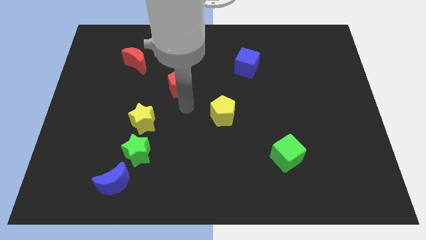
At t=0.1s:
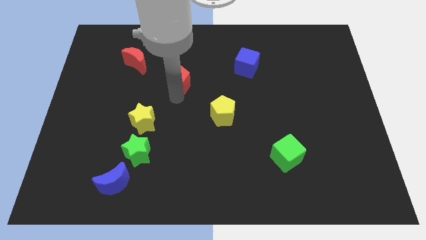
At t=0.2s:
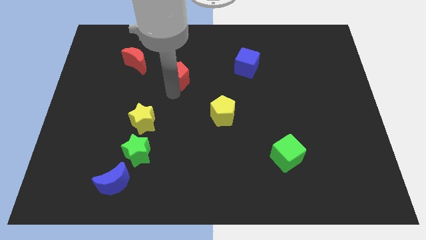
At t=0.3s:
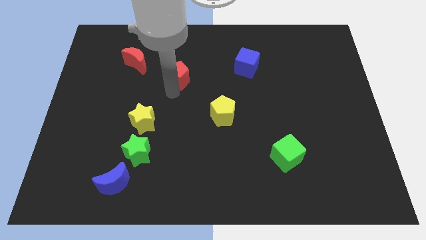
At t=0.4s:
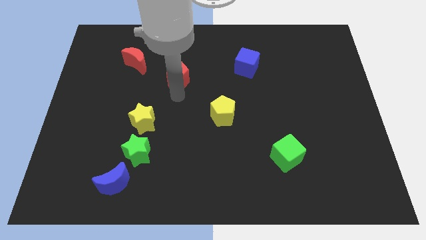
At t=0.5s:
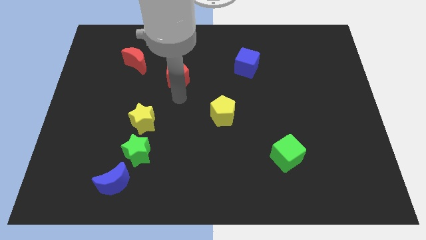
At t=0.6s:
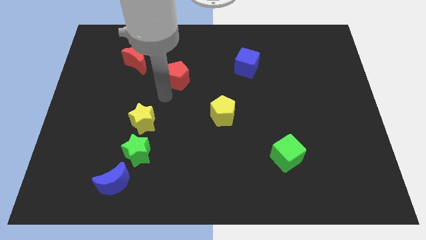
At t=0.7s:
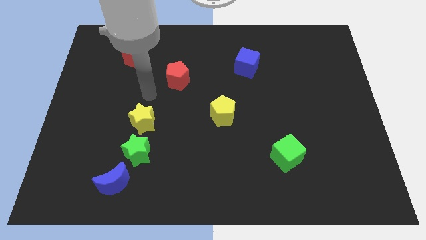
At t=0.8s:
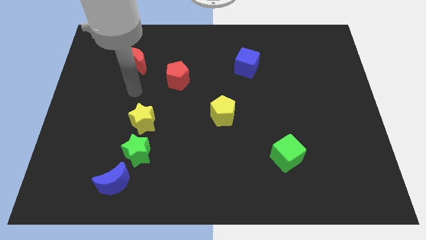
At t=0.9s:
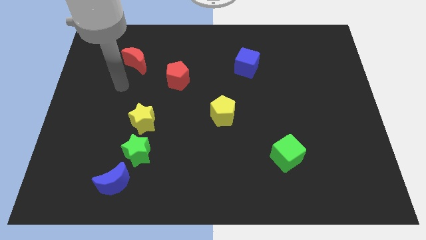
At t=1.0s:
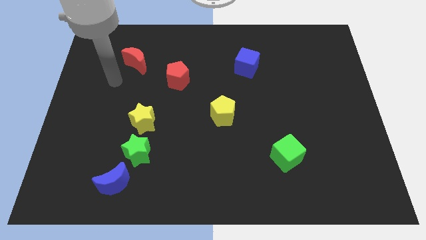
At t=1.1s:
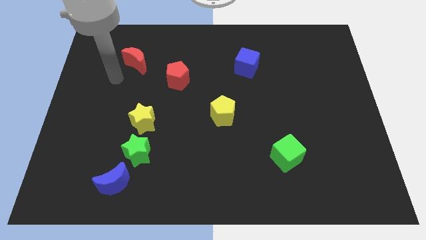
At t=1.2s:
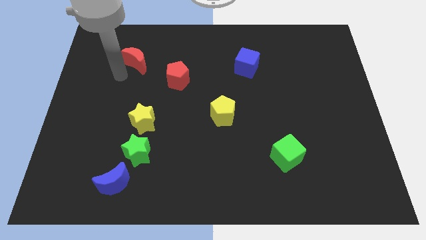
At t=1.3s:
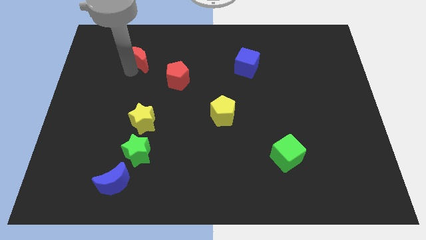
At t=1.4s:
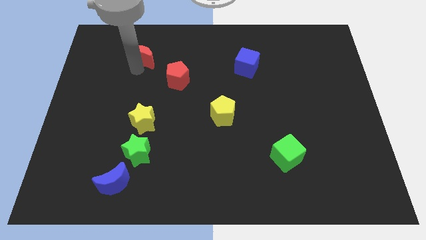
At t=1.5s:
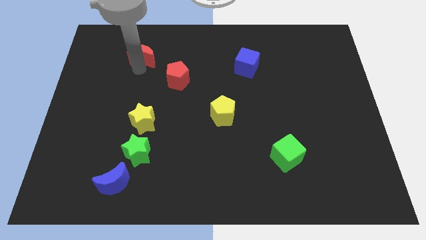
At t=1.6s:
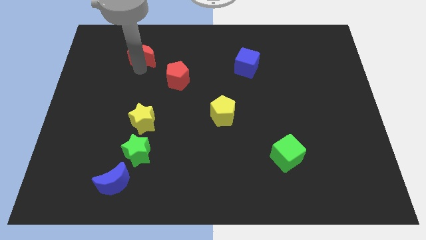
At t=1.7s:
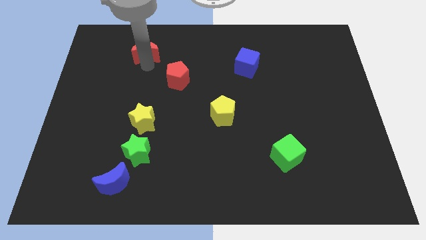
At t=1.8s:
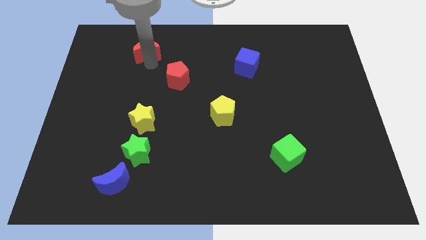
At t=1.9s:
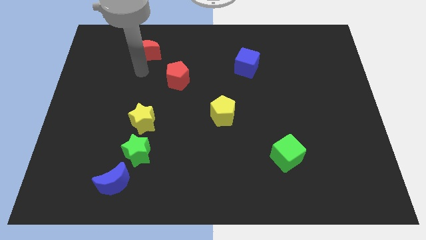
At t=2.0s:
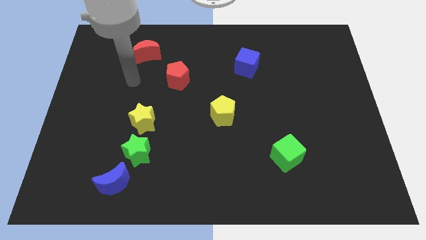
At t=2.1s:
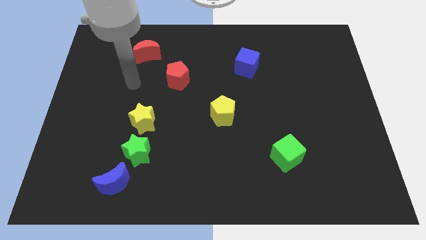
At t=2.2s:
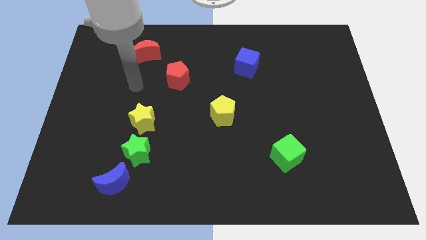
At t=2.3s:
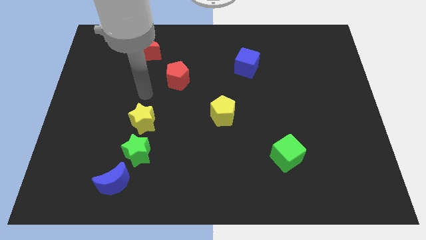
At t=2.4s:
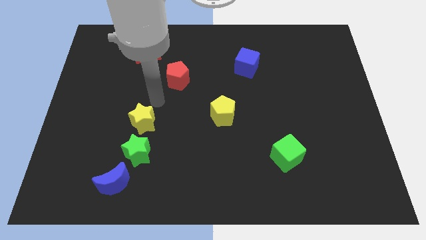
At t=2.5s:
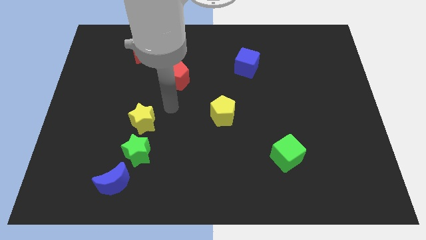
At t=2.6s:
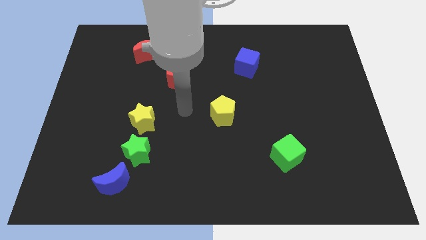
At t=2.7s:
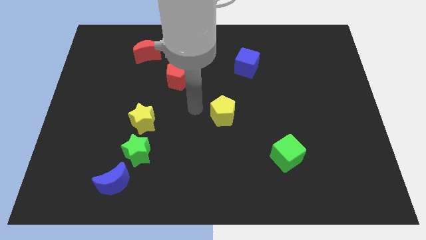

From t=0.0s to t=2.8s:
push the red crescent to the top left of the red pentagon

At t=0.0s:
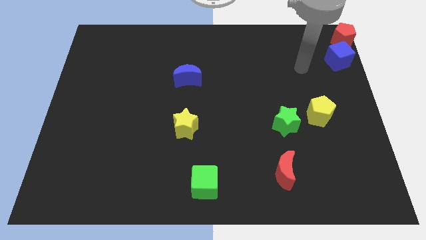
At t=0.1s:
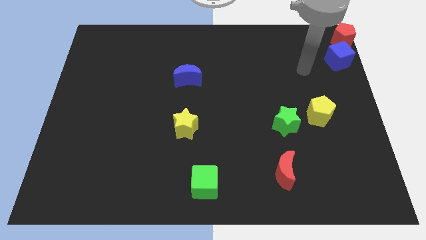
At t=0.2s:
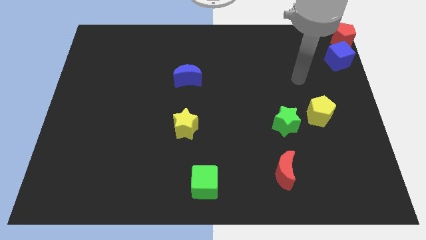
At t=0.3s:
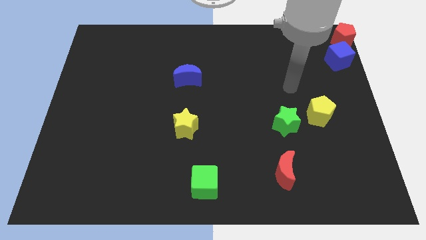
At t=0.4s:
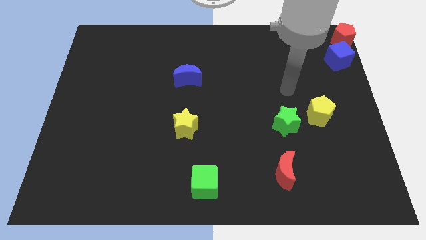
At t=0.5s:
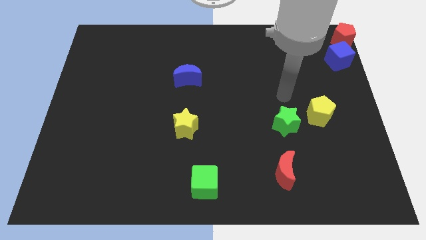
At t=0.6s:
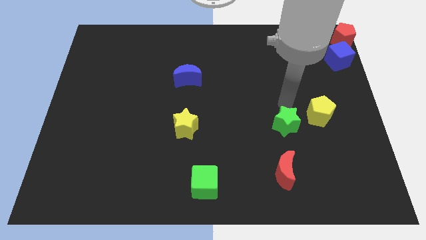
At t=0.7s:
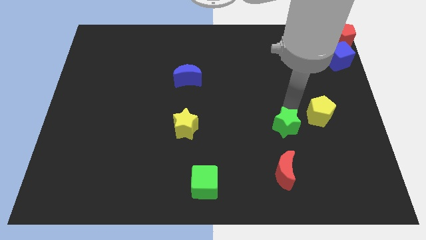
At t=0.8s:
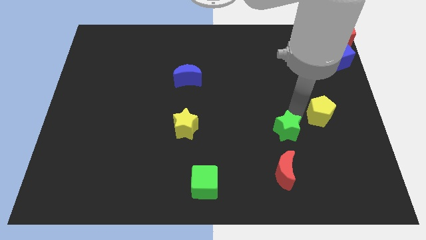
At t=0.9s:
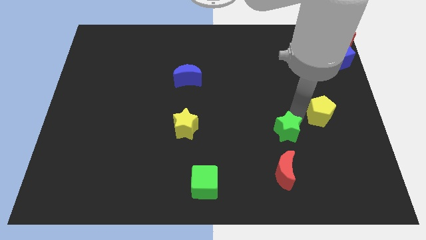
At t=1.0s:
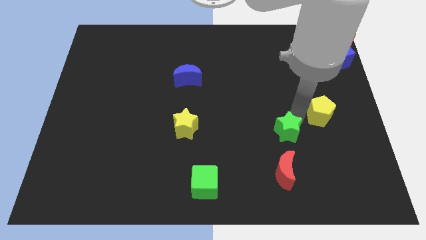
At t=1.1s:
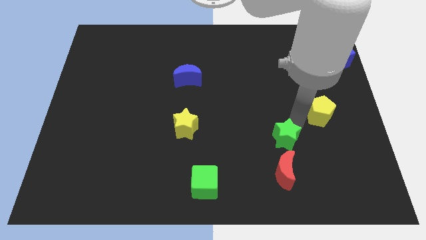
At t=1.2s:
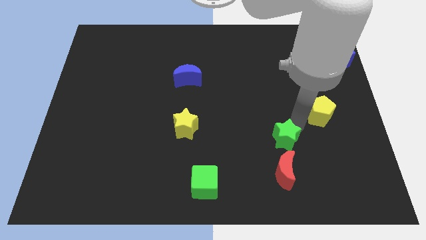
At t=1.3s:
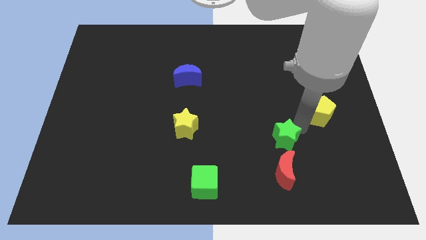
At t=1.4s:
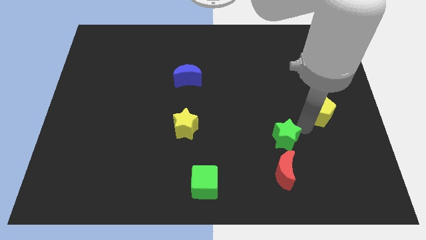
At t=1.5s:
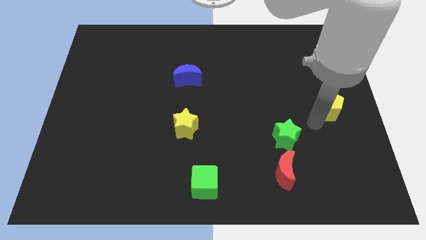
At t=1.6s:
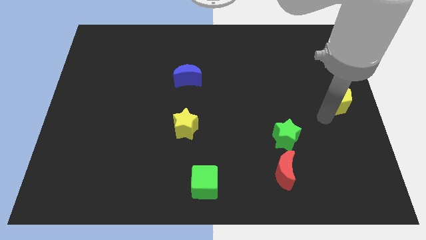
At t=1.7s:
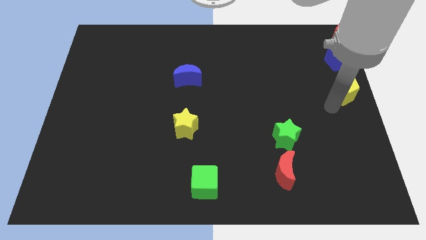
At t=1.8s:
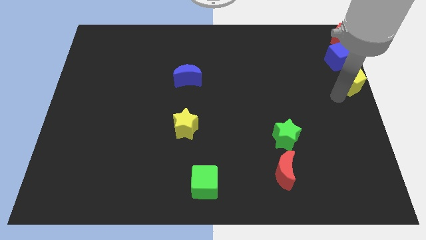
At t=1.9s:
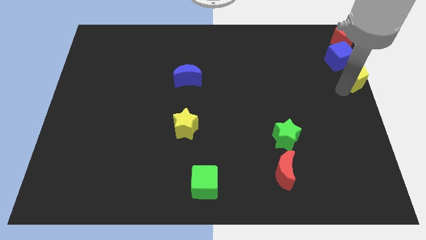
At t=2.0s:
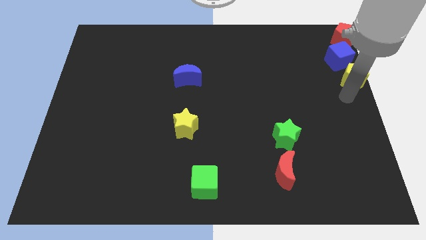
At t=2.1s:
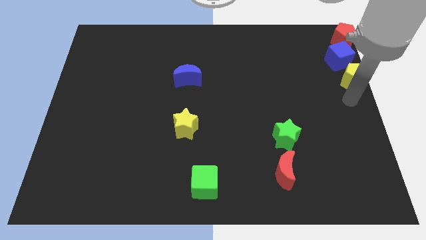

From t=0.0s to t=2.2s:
move the yellow pentagon below blue cube

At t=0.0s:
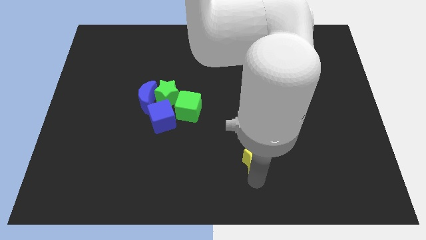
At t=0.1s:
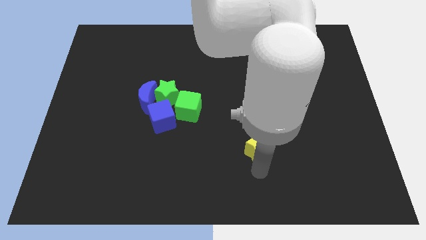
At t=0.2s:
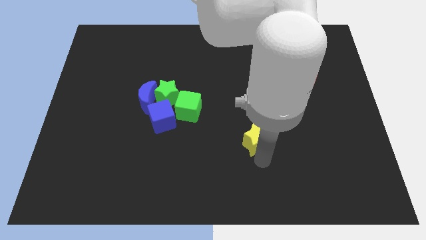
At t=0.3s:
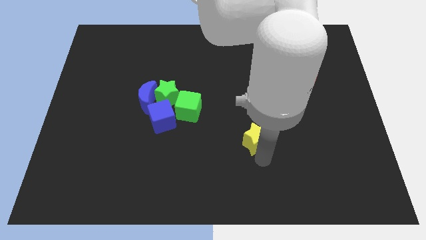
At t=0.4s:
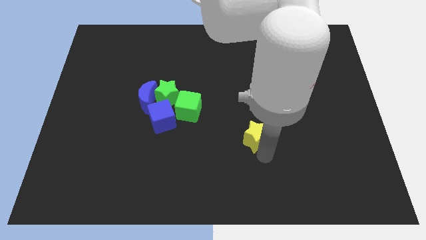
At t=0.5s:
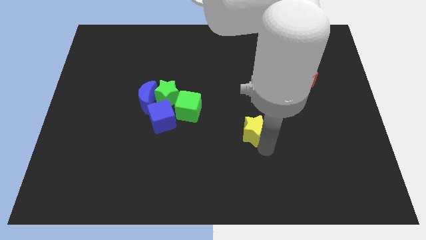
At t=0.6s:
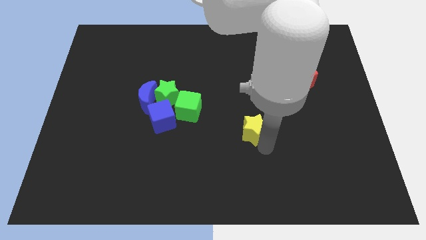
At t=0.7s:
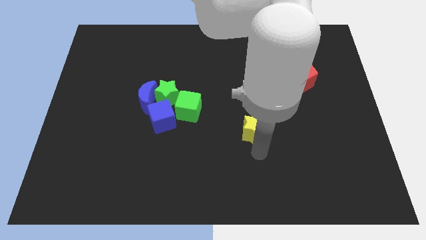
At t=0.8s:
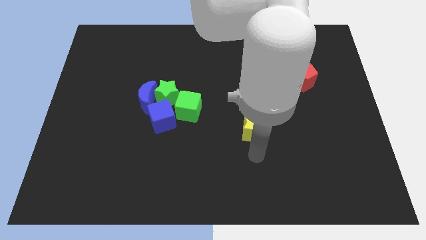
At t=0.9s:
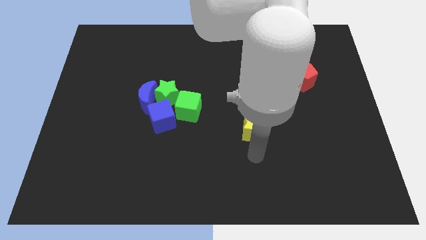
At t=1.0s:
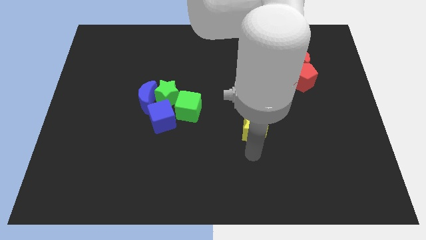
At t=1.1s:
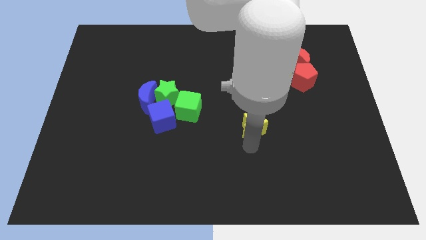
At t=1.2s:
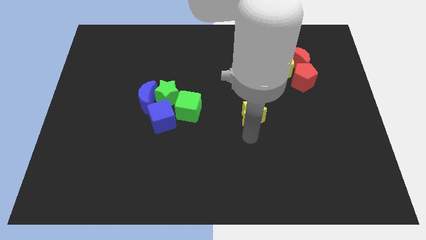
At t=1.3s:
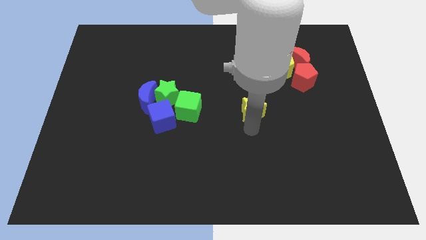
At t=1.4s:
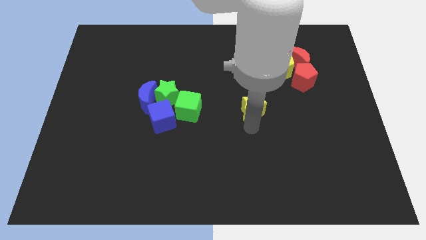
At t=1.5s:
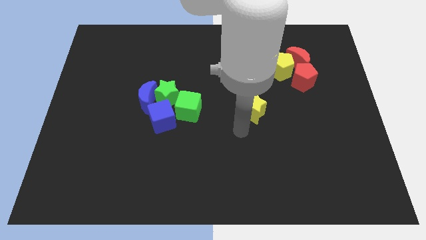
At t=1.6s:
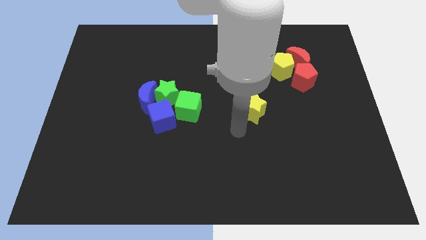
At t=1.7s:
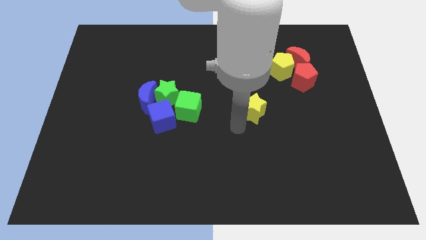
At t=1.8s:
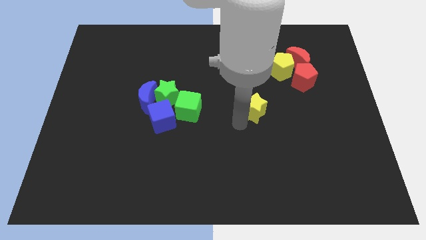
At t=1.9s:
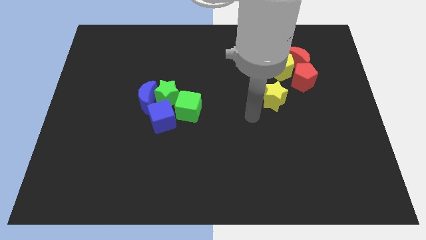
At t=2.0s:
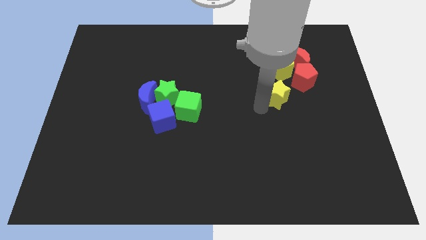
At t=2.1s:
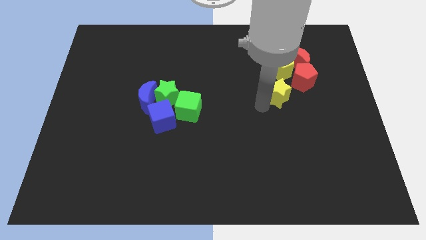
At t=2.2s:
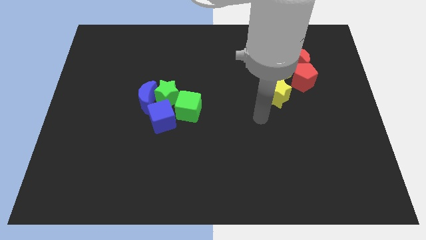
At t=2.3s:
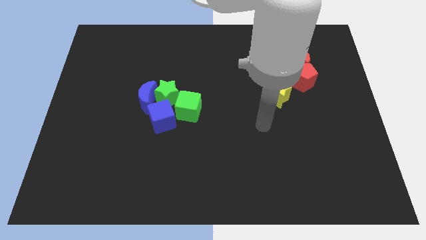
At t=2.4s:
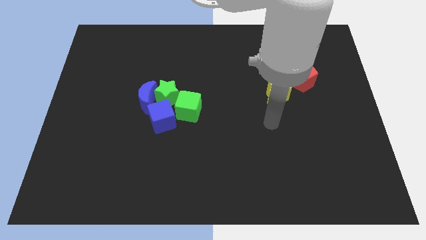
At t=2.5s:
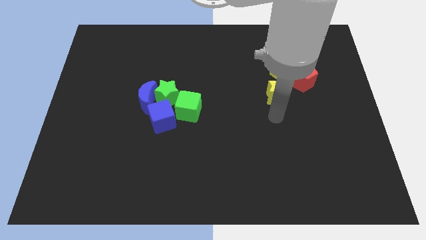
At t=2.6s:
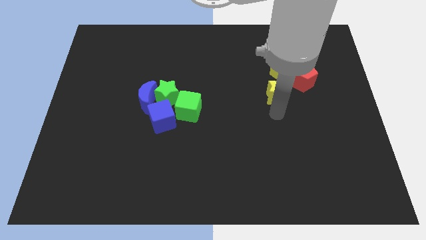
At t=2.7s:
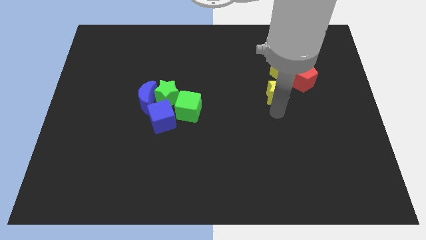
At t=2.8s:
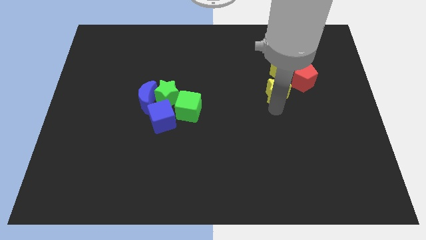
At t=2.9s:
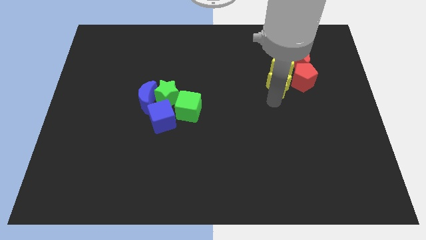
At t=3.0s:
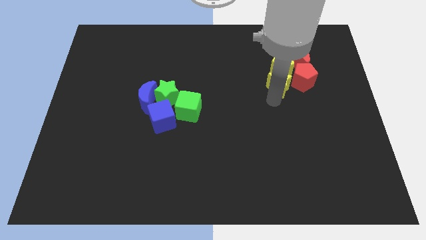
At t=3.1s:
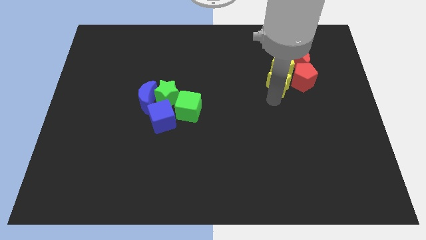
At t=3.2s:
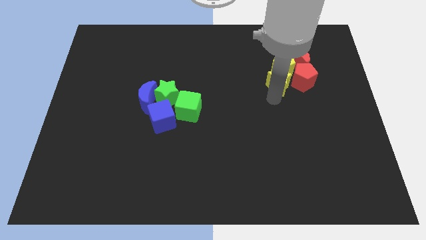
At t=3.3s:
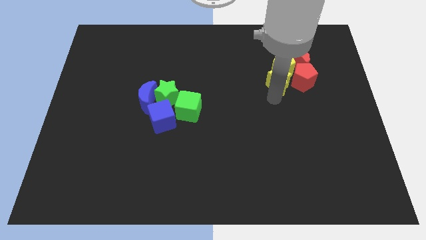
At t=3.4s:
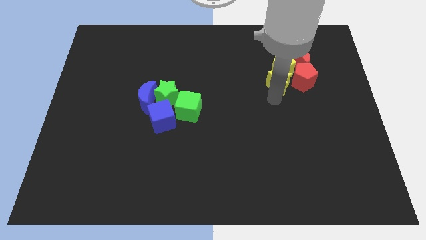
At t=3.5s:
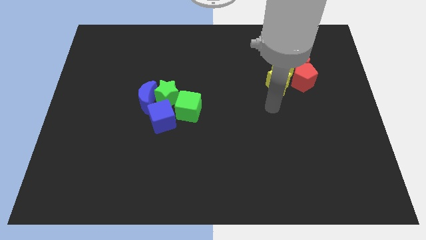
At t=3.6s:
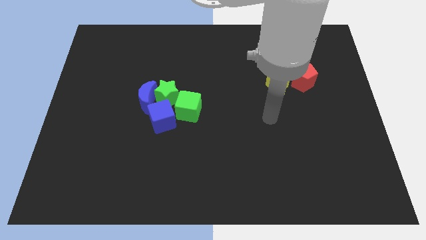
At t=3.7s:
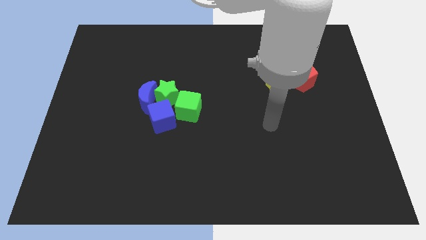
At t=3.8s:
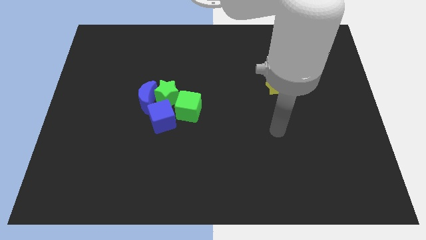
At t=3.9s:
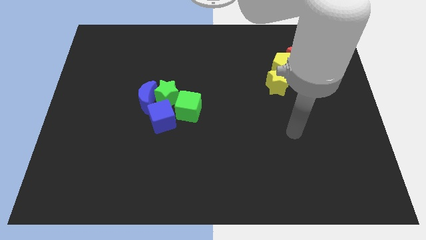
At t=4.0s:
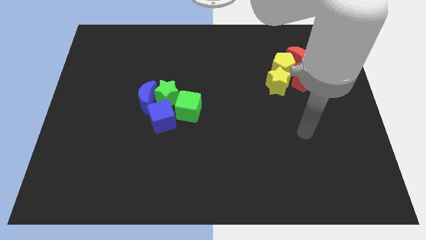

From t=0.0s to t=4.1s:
push the yellow star into the yellow pentagon
